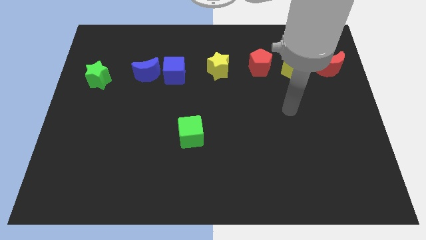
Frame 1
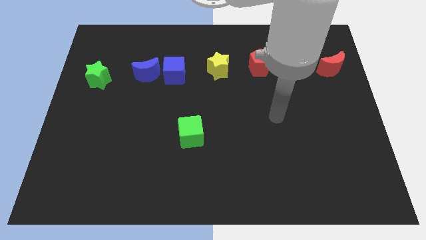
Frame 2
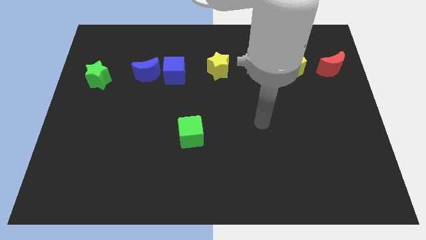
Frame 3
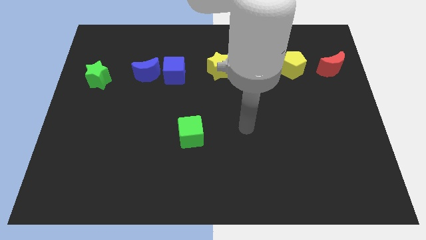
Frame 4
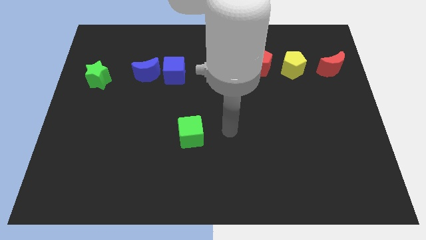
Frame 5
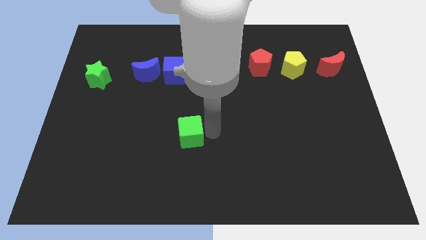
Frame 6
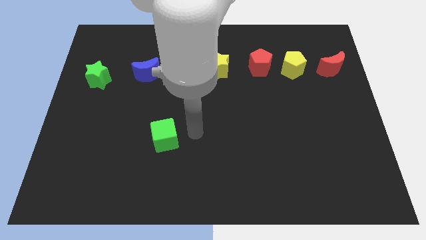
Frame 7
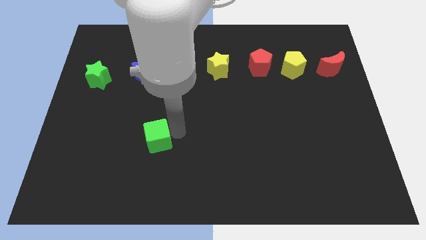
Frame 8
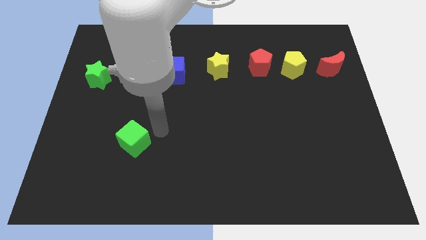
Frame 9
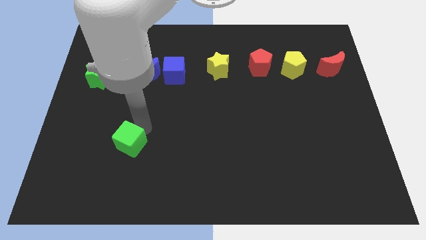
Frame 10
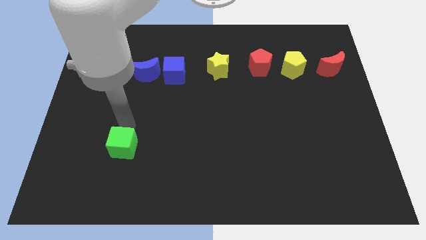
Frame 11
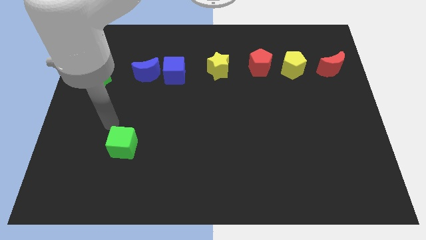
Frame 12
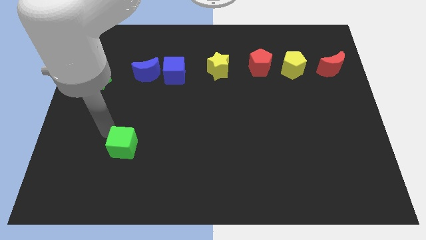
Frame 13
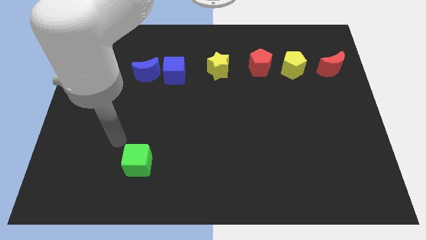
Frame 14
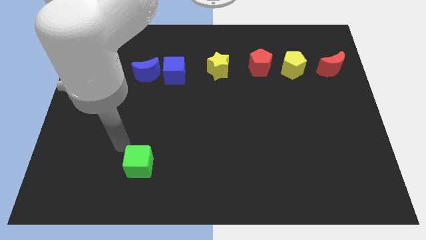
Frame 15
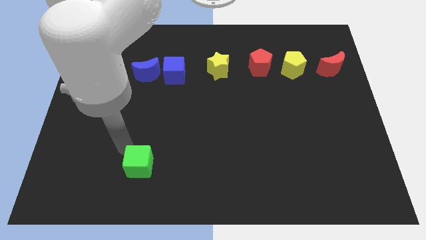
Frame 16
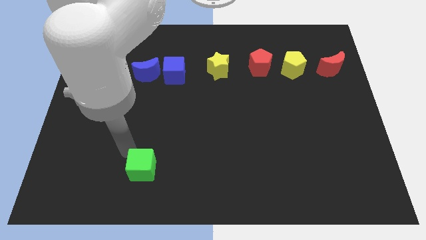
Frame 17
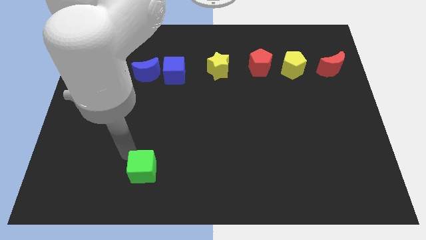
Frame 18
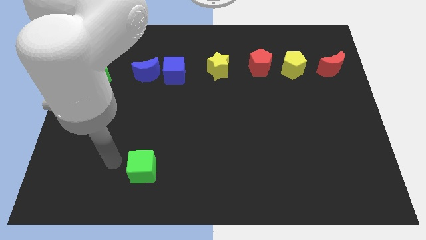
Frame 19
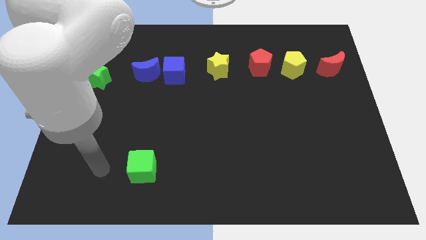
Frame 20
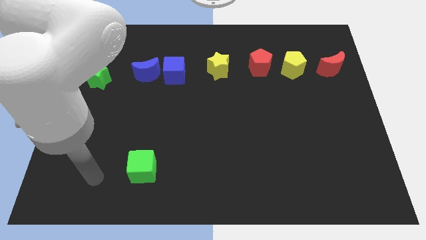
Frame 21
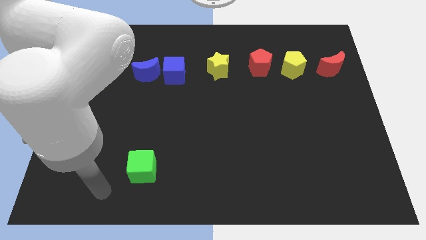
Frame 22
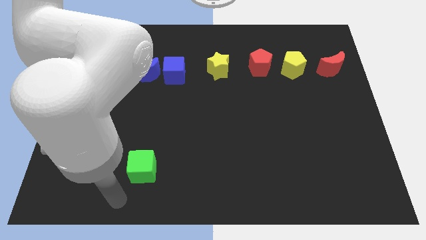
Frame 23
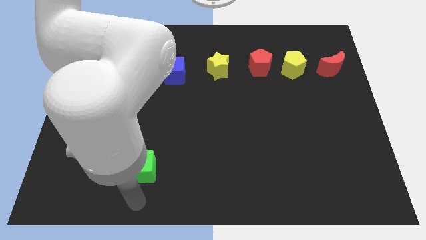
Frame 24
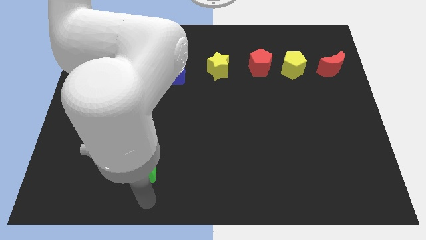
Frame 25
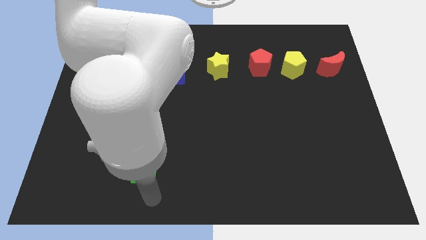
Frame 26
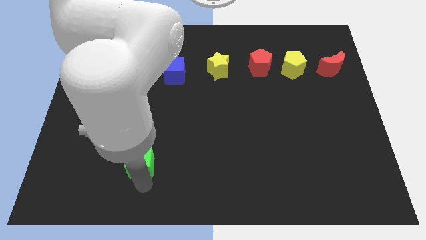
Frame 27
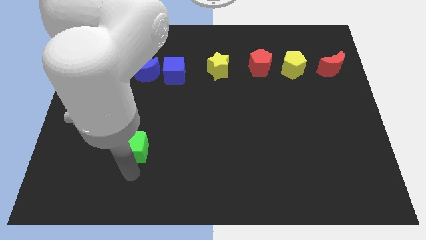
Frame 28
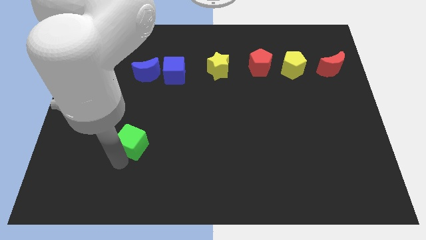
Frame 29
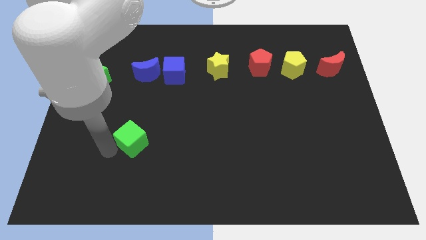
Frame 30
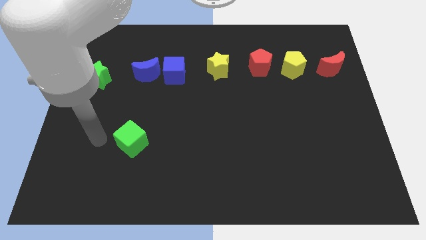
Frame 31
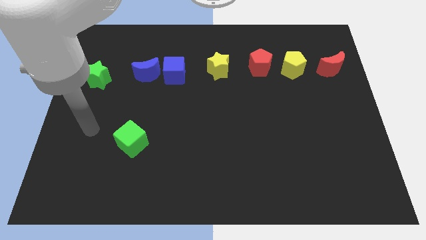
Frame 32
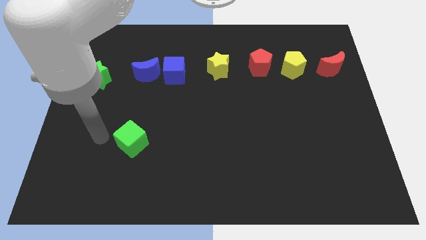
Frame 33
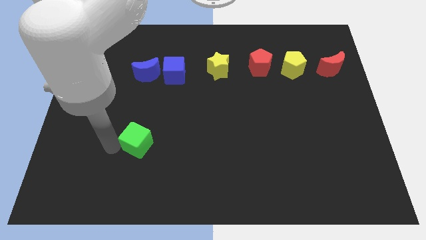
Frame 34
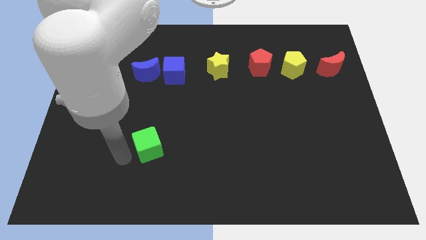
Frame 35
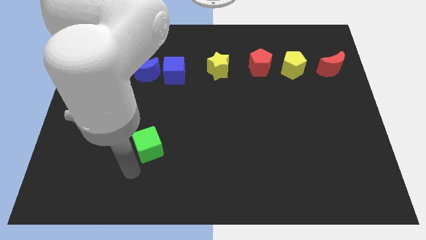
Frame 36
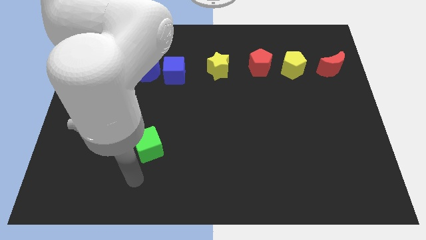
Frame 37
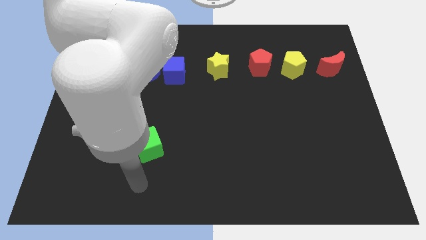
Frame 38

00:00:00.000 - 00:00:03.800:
move the green cube to the vertical bottom side of the blue moon

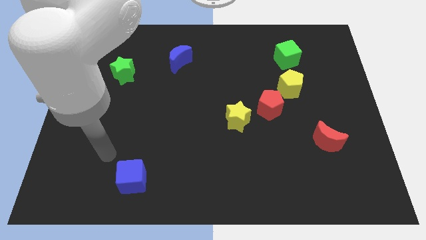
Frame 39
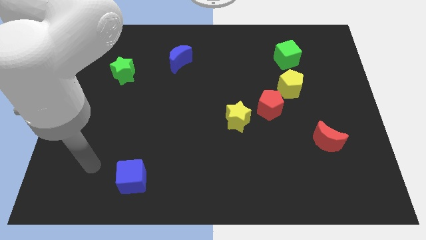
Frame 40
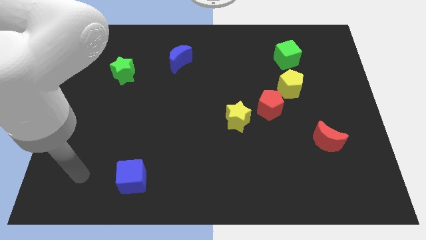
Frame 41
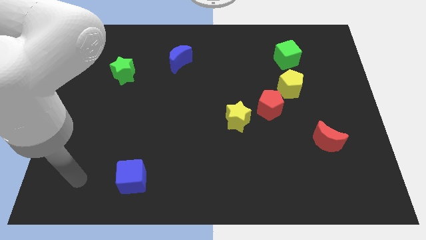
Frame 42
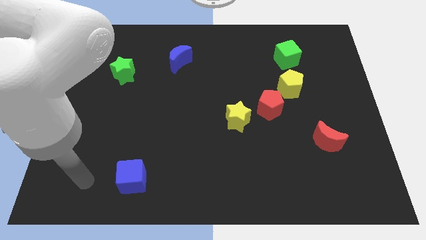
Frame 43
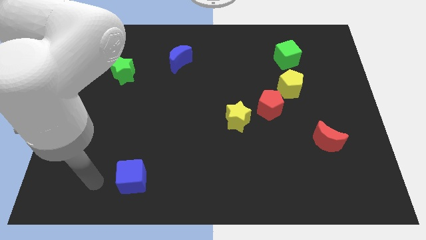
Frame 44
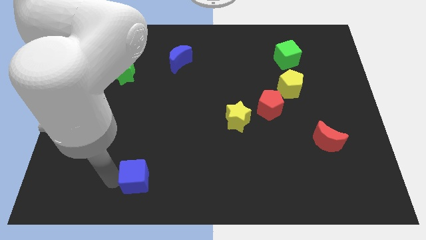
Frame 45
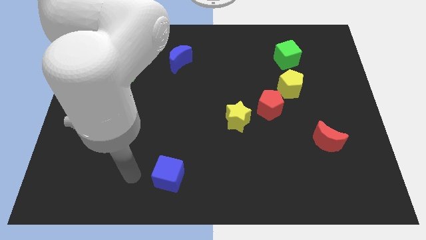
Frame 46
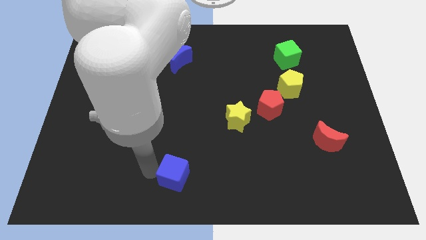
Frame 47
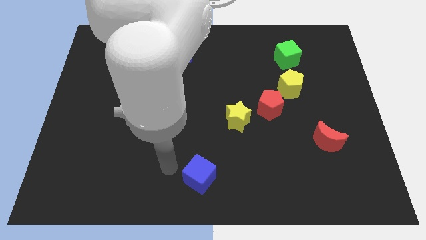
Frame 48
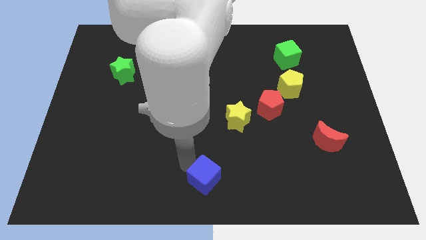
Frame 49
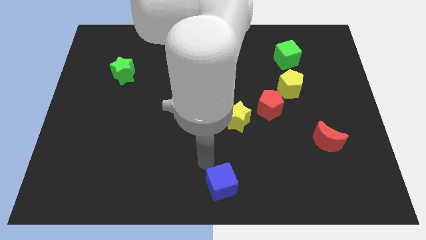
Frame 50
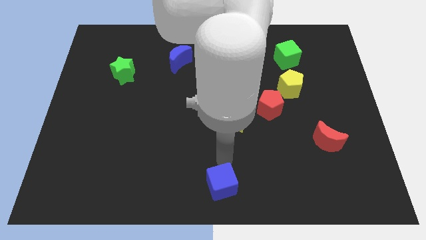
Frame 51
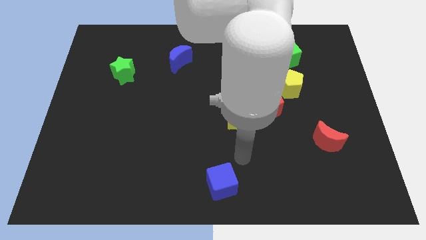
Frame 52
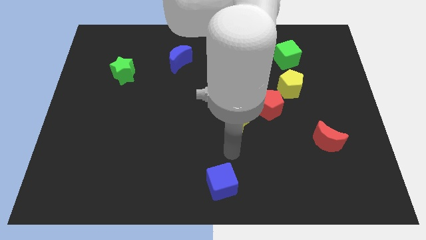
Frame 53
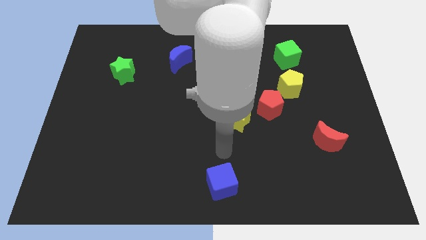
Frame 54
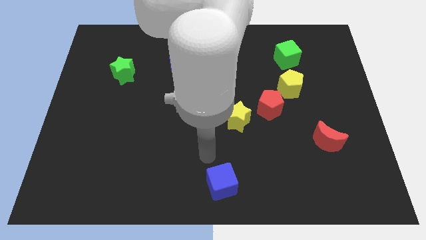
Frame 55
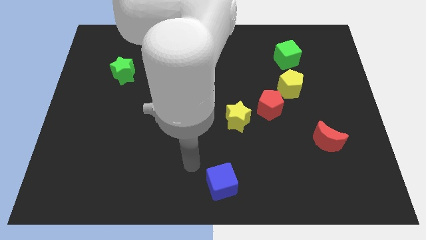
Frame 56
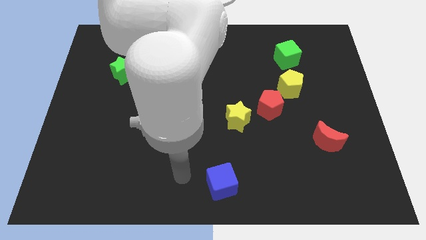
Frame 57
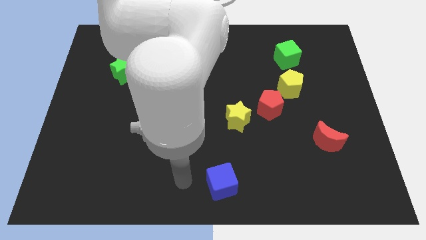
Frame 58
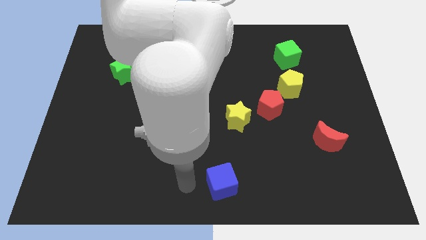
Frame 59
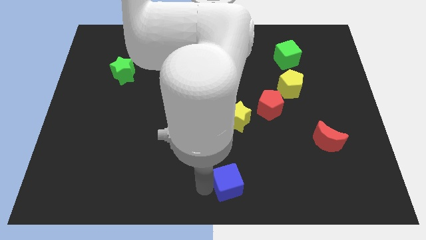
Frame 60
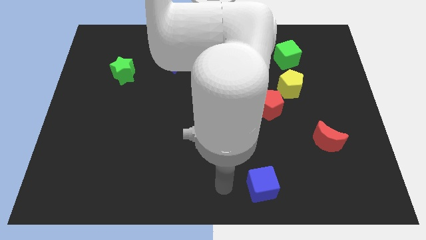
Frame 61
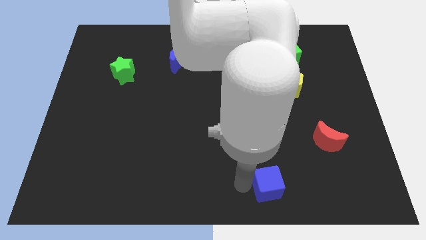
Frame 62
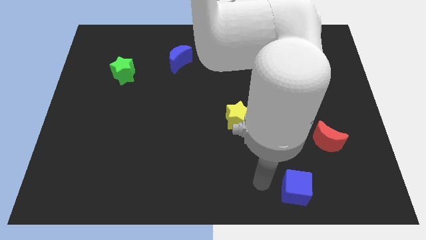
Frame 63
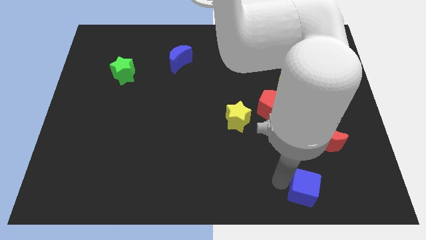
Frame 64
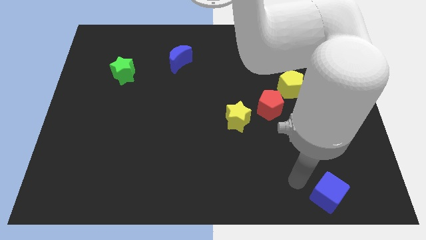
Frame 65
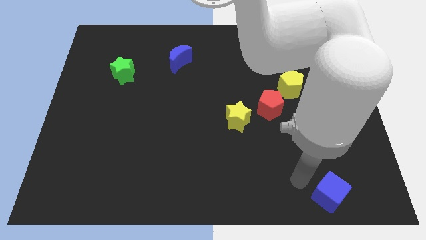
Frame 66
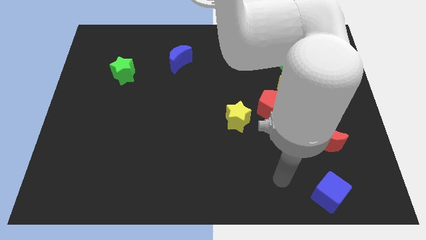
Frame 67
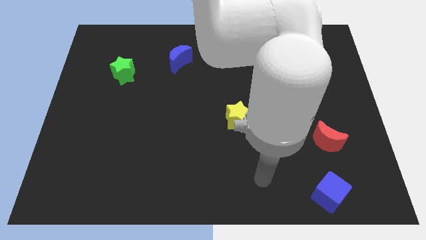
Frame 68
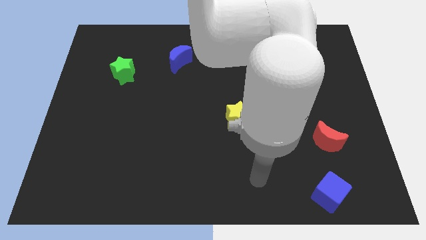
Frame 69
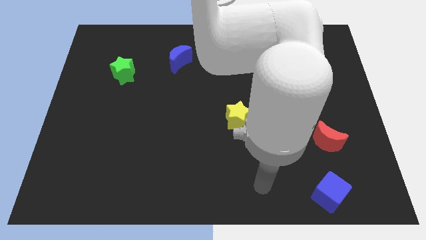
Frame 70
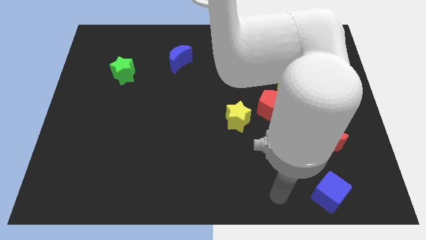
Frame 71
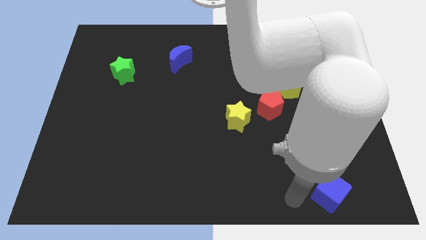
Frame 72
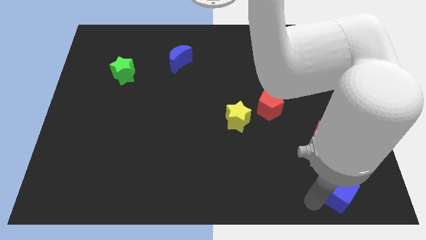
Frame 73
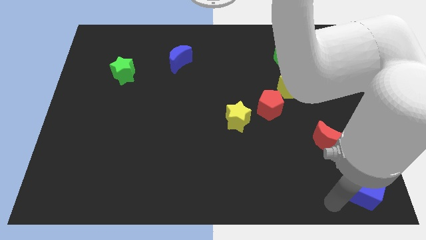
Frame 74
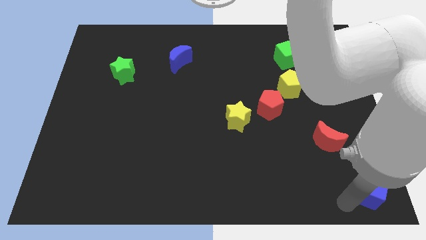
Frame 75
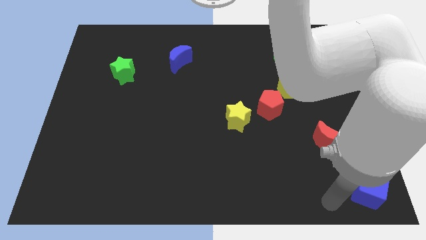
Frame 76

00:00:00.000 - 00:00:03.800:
push the blue cube to the bottom right of the board

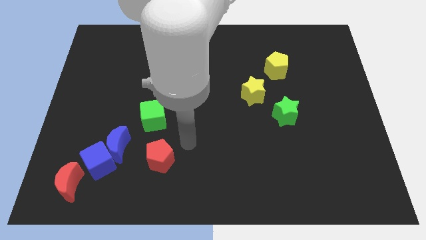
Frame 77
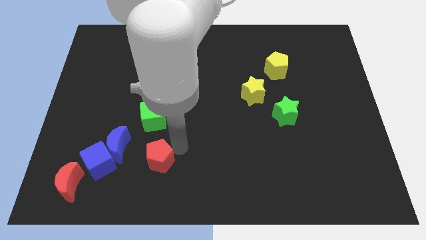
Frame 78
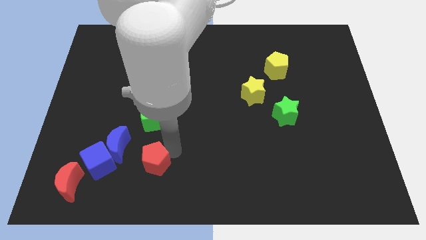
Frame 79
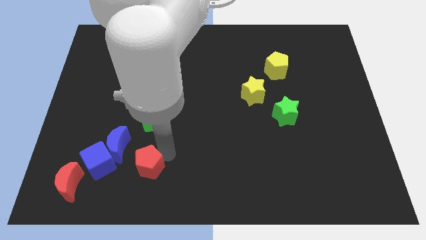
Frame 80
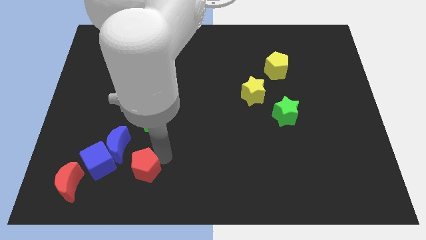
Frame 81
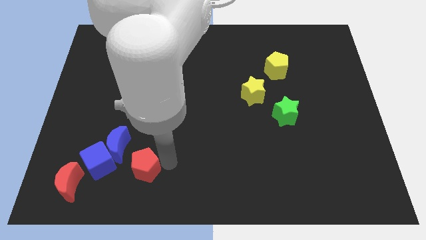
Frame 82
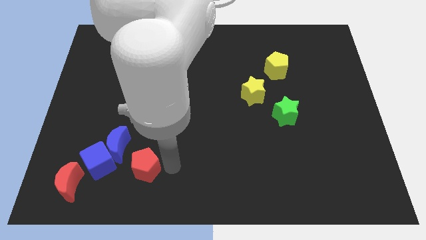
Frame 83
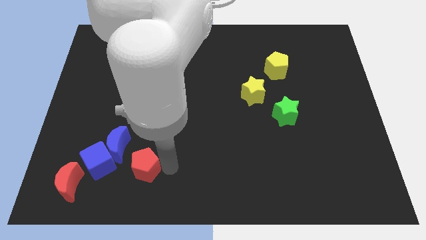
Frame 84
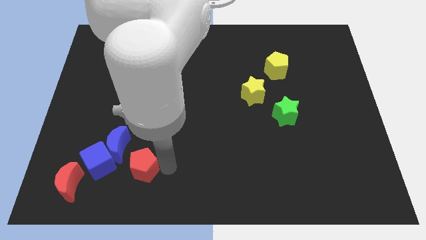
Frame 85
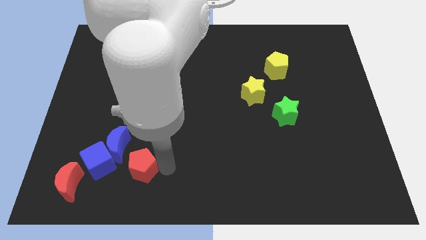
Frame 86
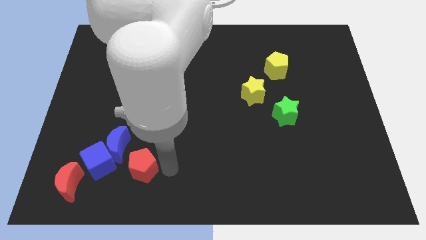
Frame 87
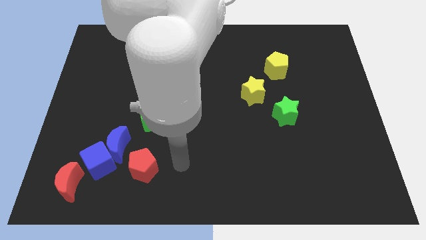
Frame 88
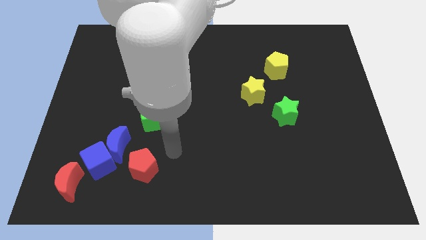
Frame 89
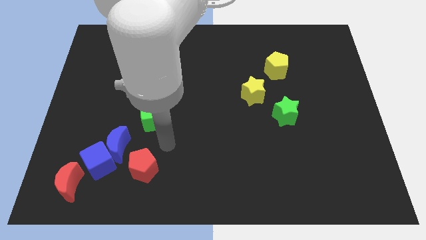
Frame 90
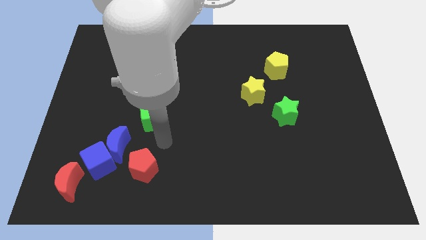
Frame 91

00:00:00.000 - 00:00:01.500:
place the red pentagon at the right side of the blue cube
